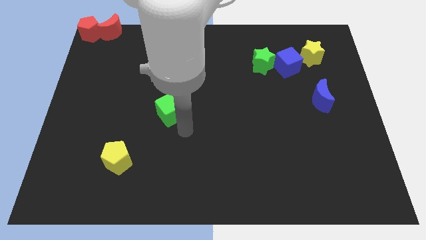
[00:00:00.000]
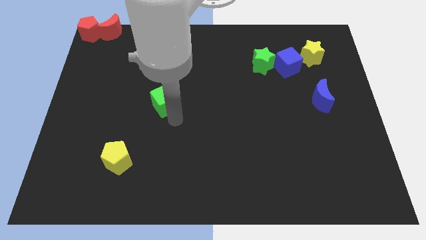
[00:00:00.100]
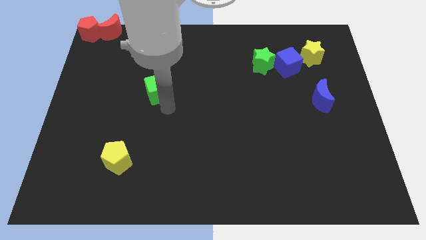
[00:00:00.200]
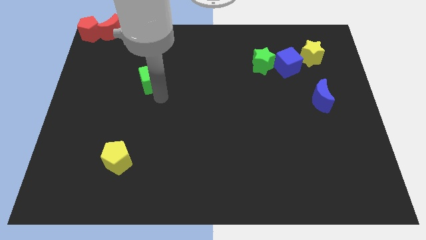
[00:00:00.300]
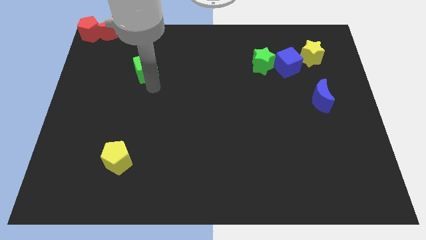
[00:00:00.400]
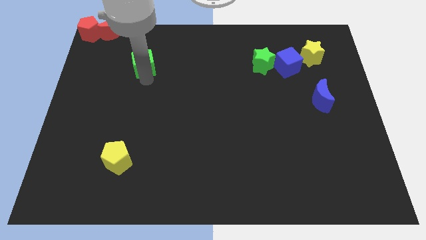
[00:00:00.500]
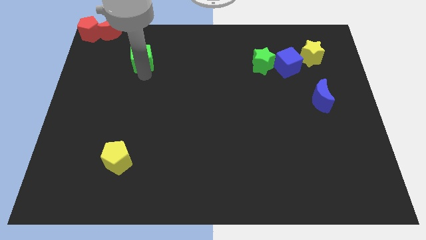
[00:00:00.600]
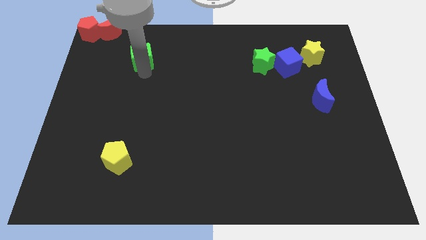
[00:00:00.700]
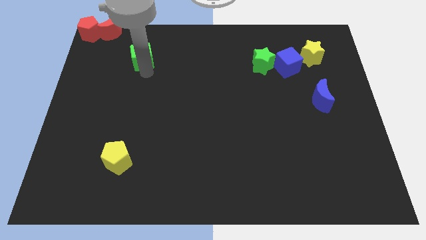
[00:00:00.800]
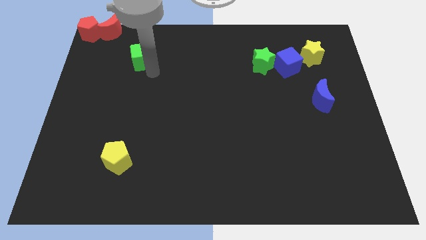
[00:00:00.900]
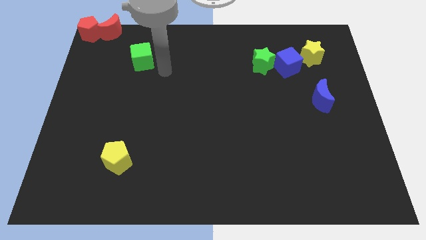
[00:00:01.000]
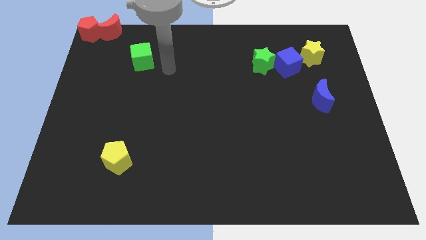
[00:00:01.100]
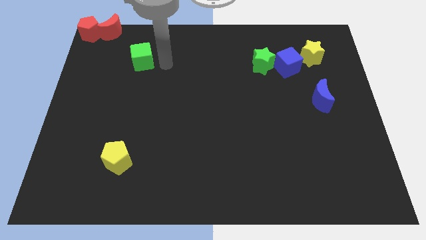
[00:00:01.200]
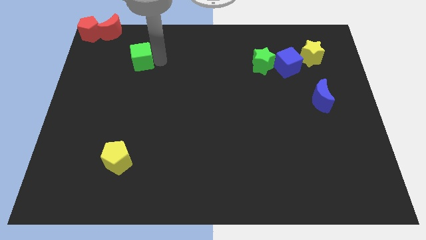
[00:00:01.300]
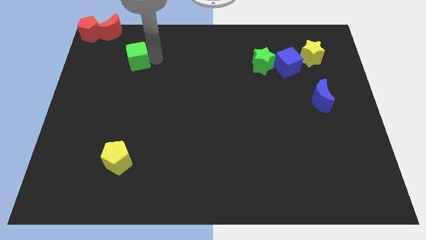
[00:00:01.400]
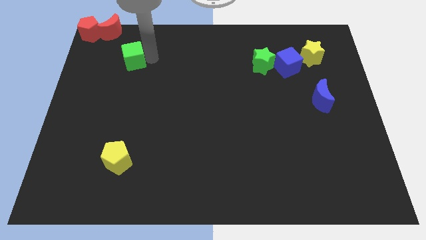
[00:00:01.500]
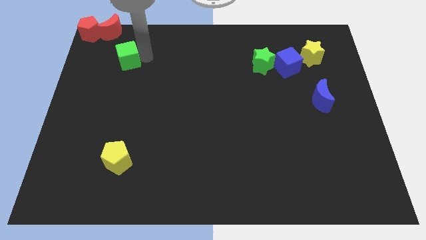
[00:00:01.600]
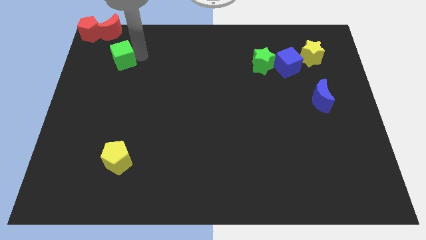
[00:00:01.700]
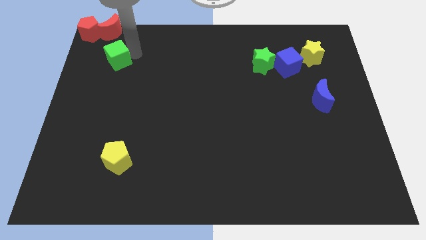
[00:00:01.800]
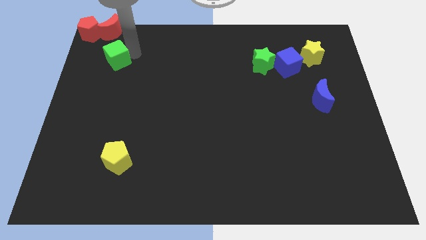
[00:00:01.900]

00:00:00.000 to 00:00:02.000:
place the green cube below the red crescent

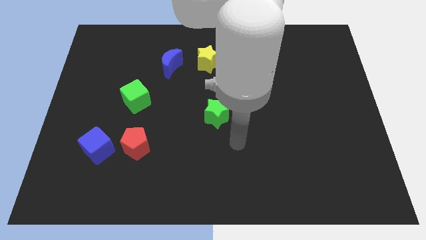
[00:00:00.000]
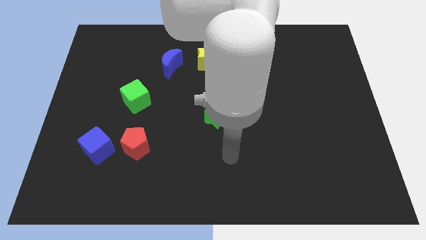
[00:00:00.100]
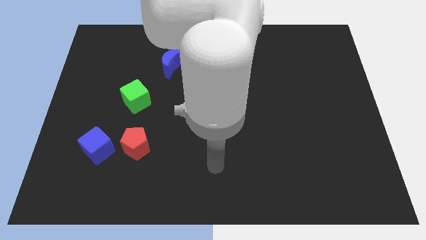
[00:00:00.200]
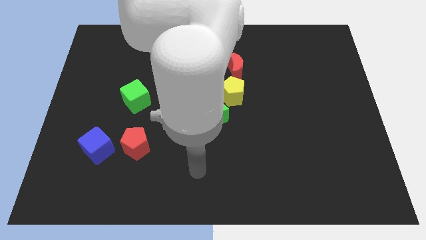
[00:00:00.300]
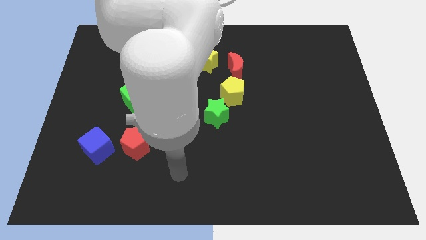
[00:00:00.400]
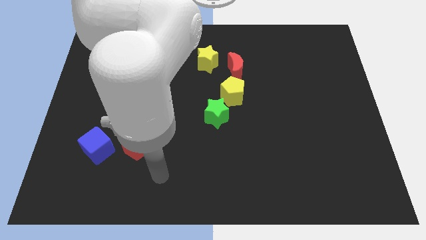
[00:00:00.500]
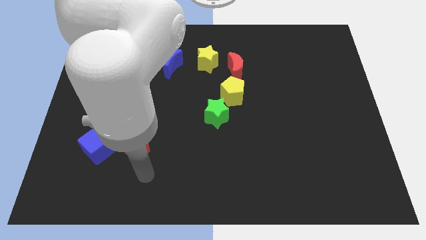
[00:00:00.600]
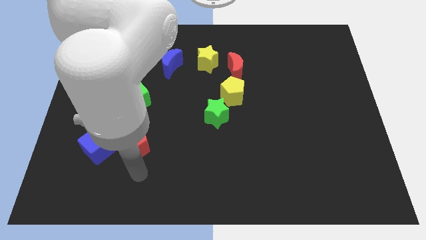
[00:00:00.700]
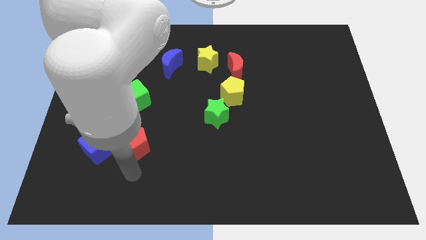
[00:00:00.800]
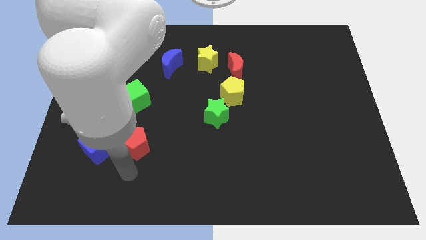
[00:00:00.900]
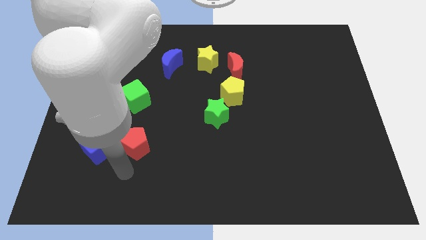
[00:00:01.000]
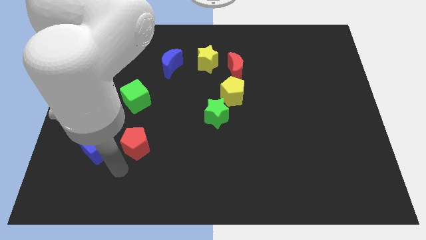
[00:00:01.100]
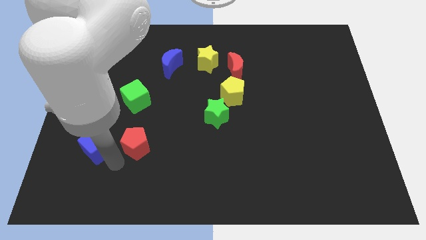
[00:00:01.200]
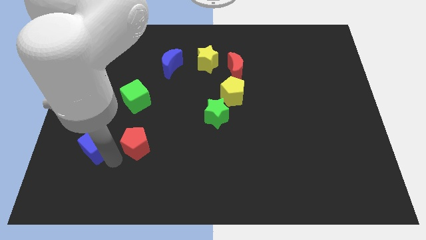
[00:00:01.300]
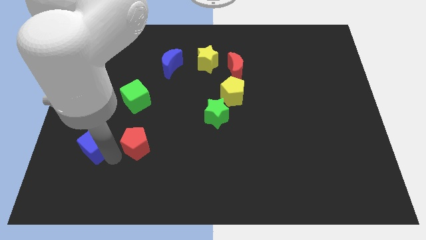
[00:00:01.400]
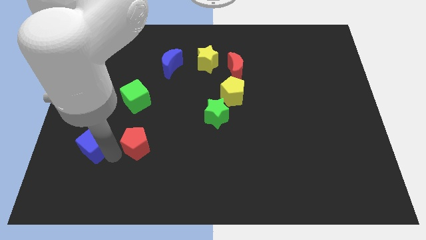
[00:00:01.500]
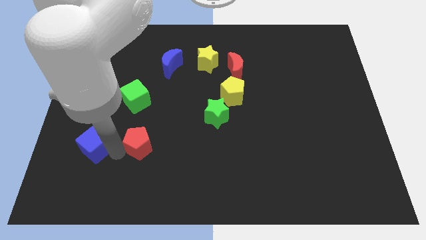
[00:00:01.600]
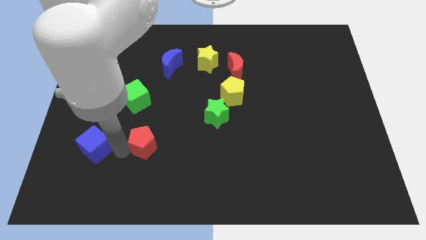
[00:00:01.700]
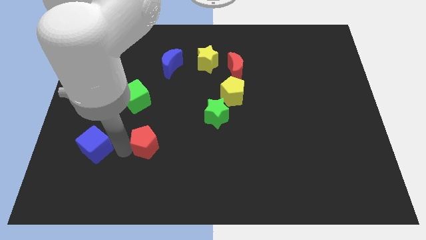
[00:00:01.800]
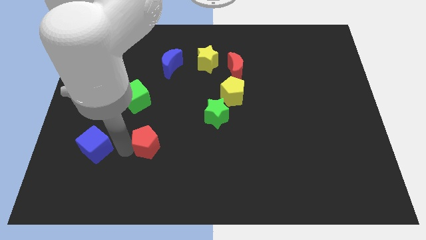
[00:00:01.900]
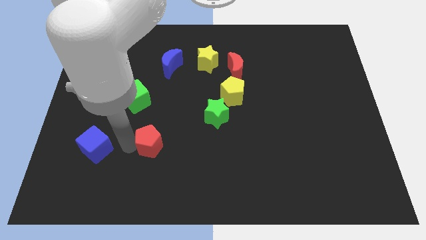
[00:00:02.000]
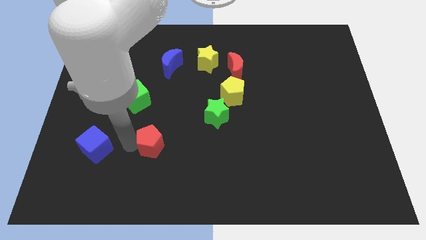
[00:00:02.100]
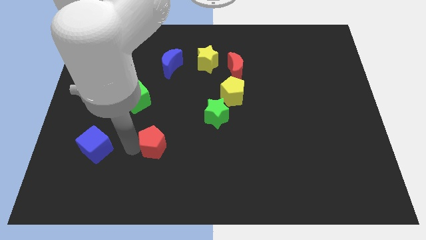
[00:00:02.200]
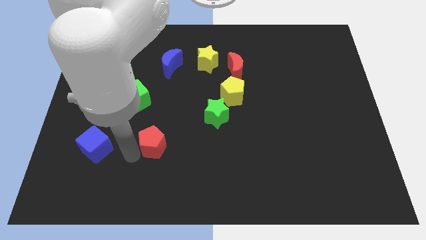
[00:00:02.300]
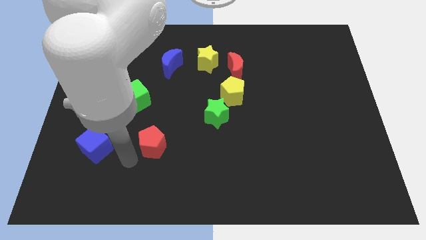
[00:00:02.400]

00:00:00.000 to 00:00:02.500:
move the red pentagon slightly to the right

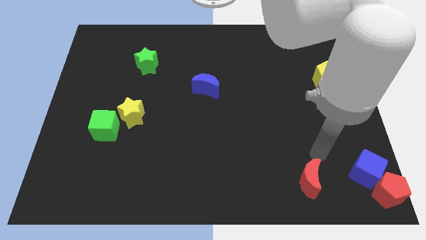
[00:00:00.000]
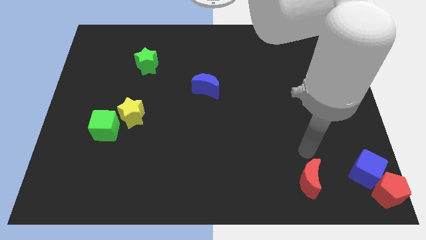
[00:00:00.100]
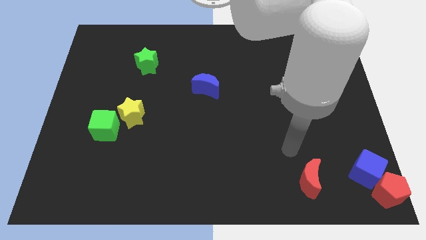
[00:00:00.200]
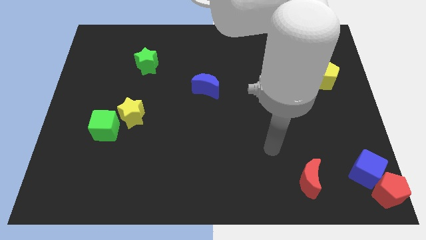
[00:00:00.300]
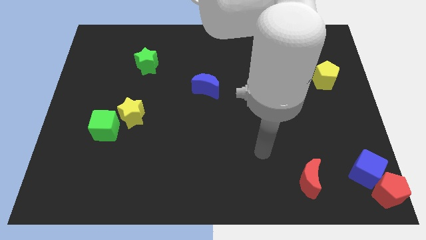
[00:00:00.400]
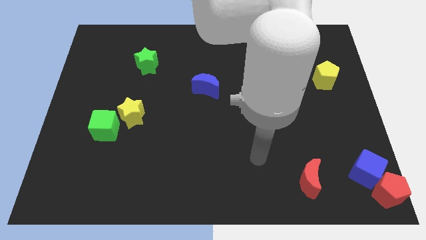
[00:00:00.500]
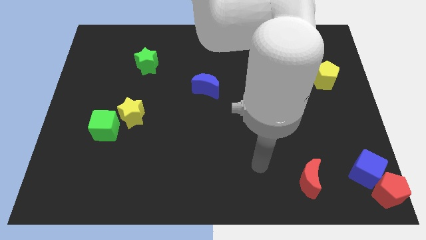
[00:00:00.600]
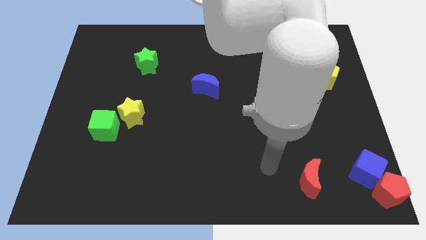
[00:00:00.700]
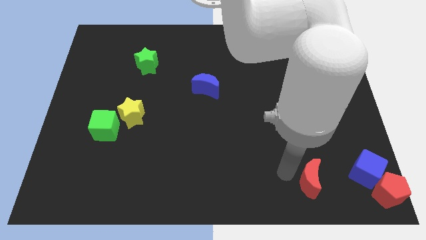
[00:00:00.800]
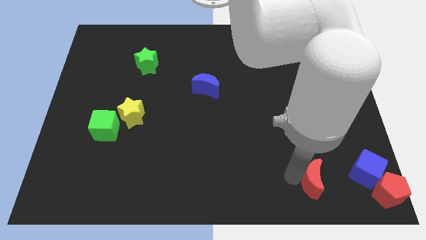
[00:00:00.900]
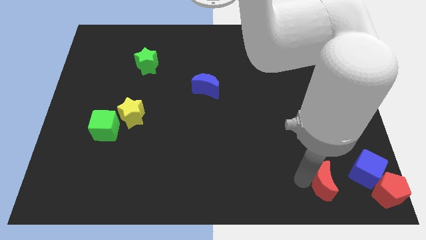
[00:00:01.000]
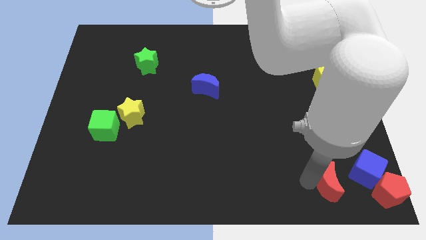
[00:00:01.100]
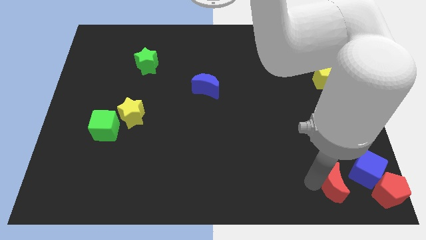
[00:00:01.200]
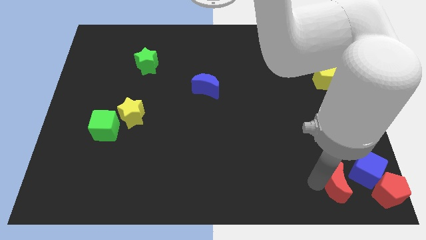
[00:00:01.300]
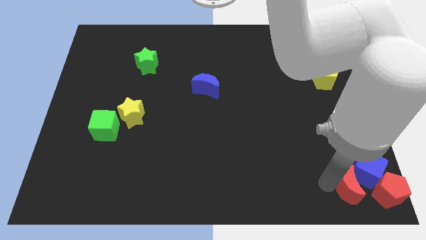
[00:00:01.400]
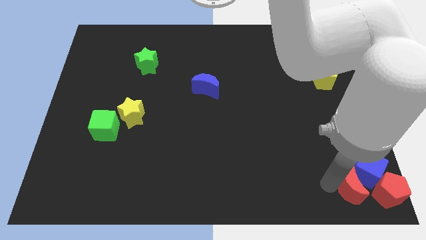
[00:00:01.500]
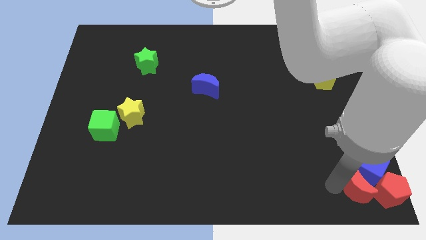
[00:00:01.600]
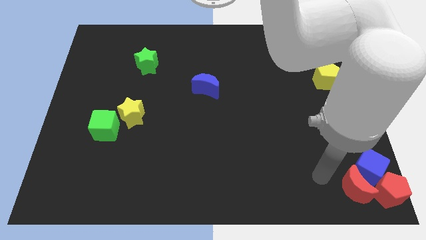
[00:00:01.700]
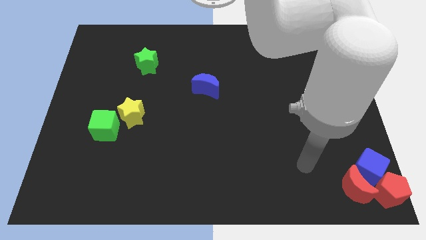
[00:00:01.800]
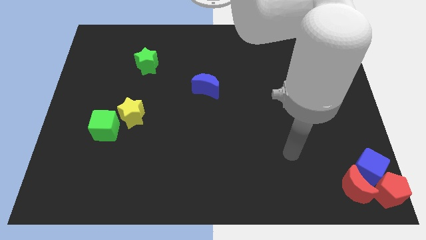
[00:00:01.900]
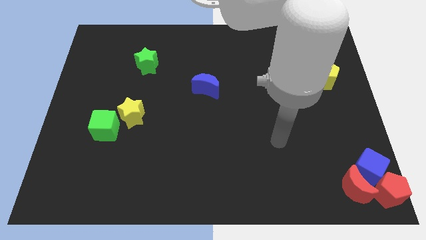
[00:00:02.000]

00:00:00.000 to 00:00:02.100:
attach the red moon to the blue cube

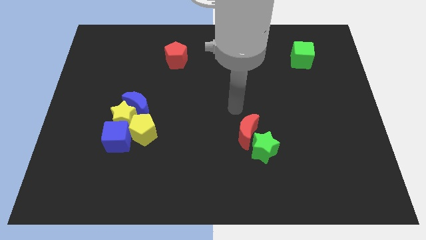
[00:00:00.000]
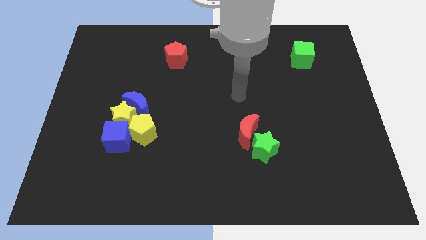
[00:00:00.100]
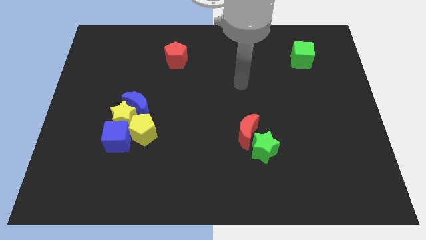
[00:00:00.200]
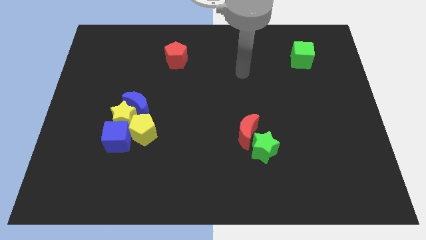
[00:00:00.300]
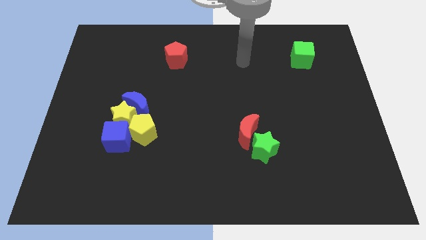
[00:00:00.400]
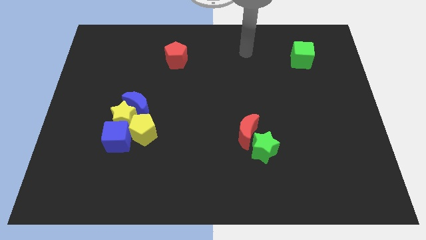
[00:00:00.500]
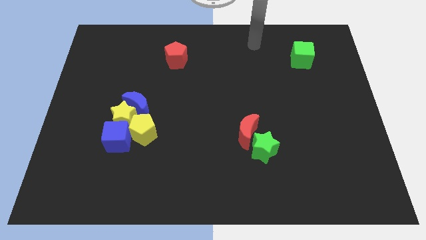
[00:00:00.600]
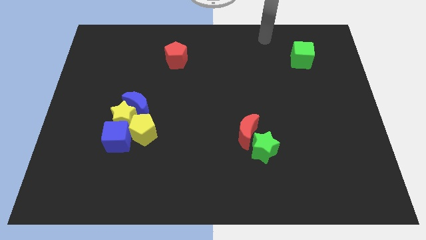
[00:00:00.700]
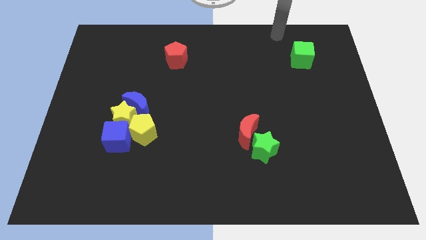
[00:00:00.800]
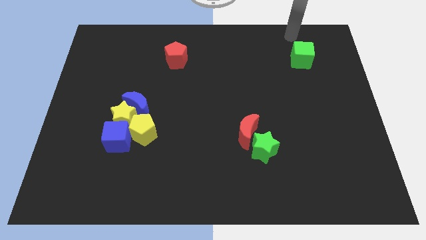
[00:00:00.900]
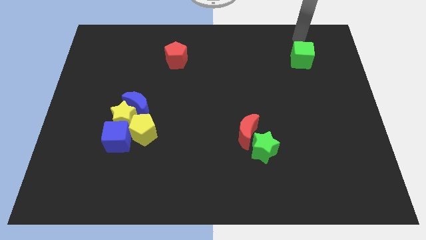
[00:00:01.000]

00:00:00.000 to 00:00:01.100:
point your arms at the top side of the green cube

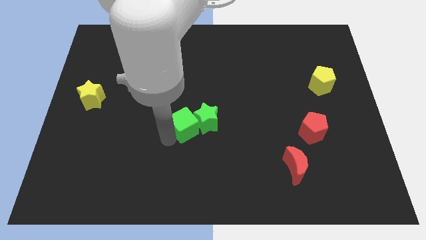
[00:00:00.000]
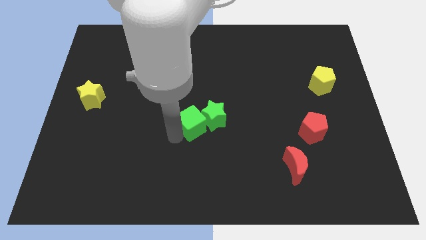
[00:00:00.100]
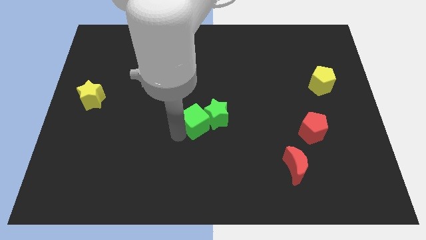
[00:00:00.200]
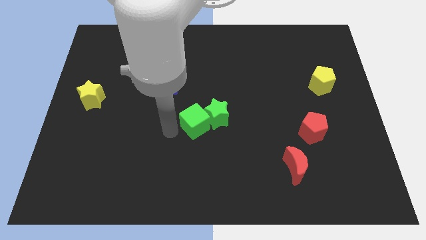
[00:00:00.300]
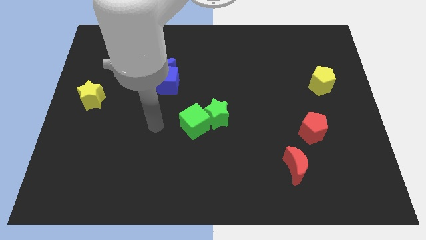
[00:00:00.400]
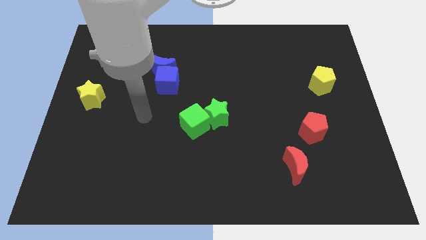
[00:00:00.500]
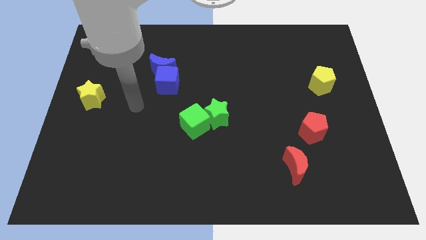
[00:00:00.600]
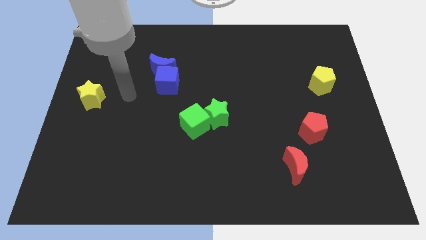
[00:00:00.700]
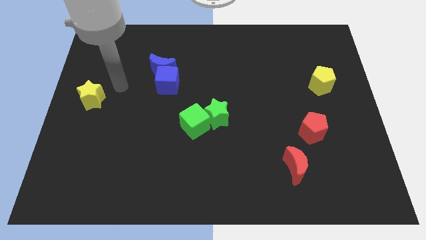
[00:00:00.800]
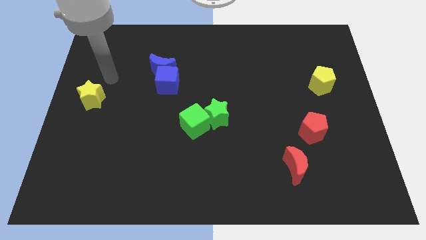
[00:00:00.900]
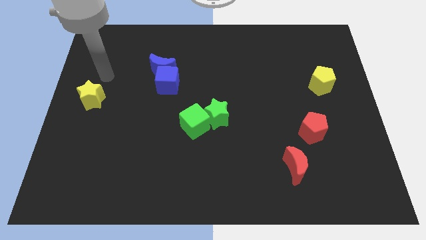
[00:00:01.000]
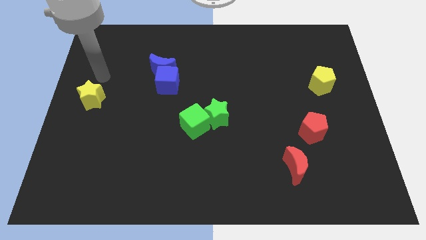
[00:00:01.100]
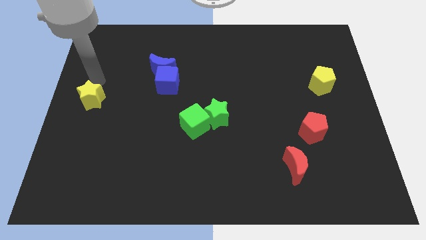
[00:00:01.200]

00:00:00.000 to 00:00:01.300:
move you arm away from the green cube

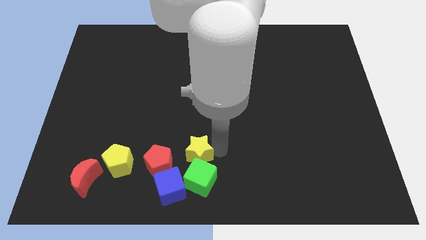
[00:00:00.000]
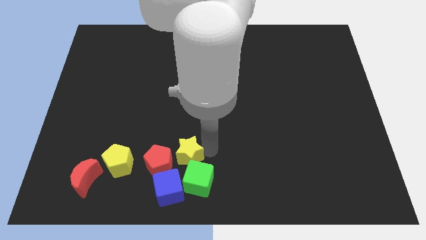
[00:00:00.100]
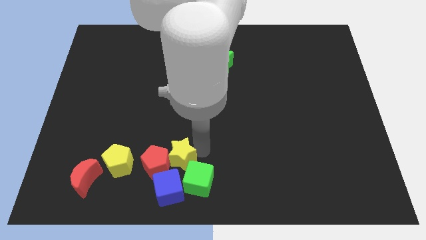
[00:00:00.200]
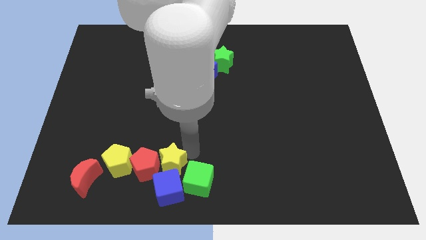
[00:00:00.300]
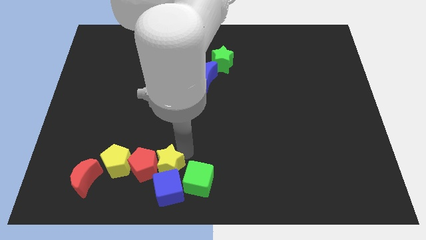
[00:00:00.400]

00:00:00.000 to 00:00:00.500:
push the yellow star into the red pentagon
